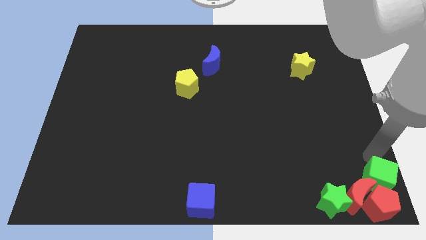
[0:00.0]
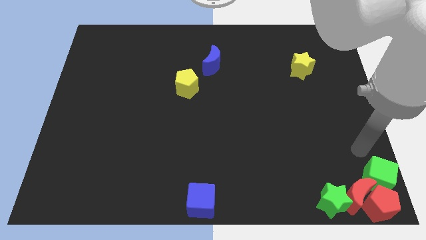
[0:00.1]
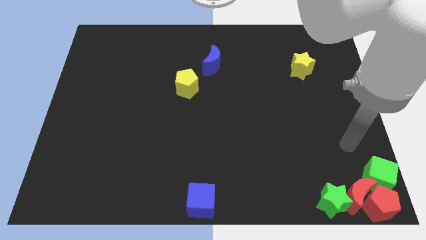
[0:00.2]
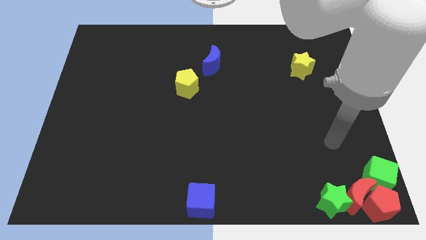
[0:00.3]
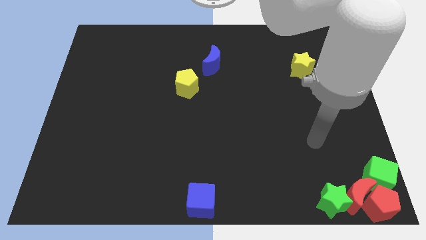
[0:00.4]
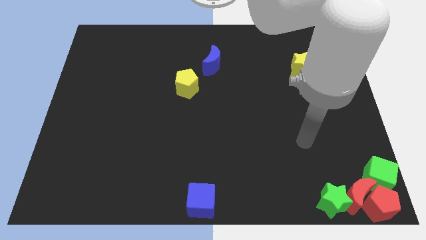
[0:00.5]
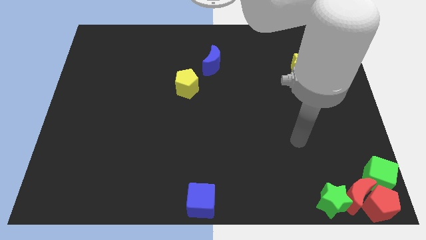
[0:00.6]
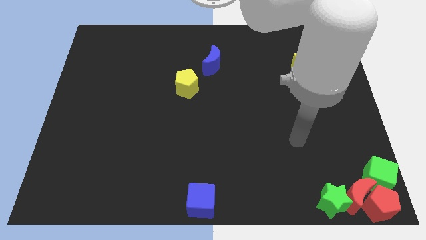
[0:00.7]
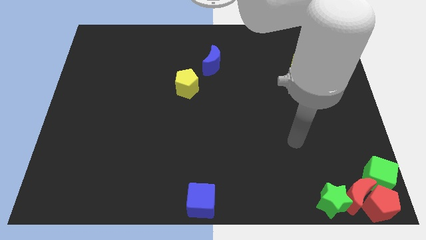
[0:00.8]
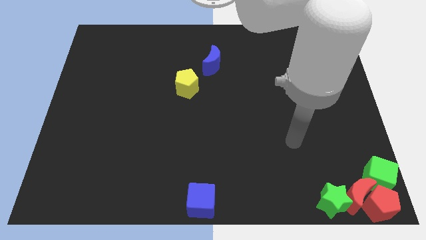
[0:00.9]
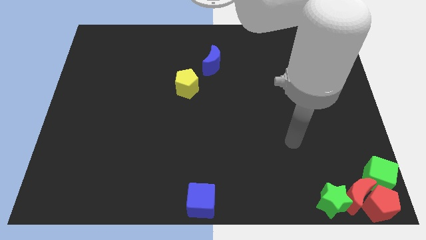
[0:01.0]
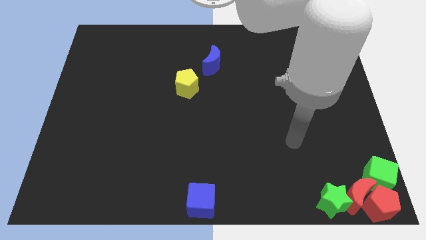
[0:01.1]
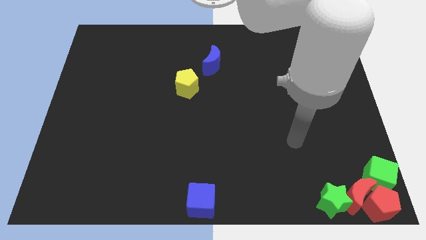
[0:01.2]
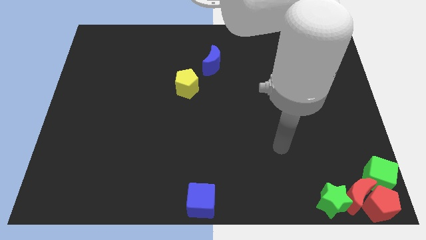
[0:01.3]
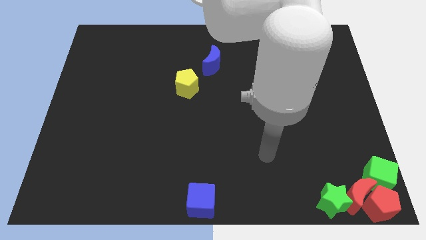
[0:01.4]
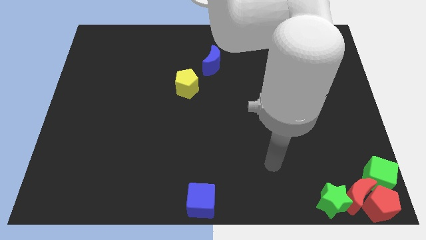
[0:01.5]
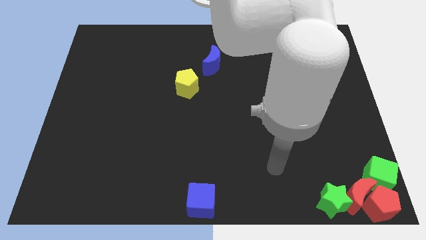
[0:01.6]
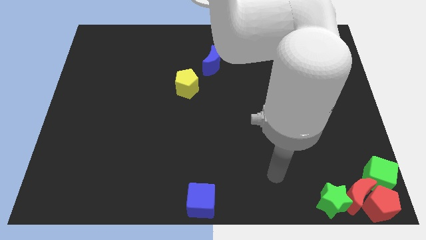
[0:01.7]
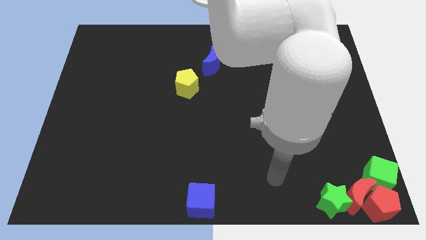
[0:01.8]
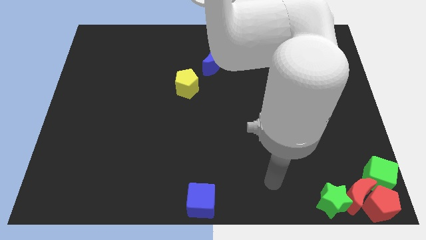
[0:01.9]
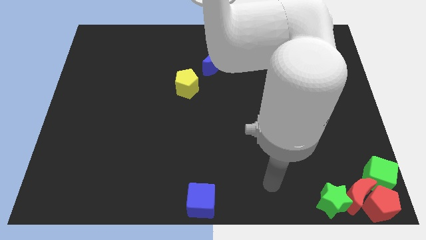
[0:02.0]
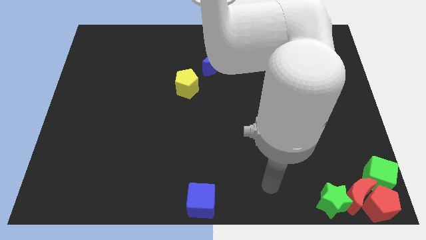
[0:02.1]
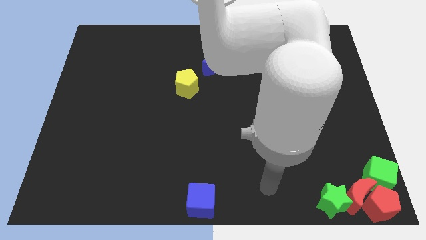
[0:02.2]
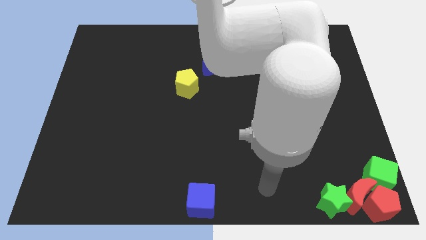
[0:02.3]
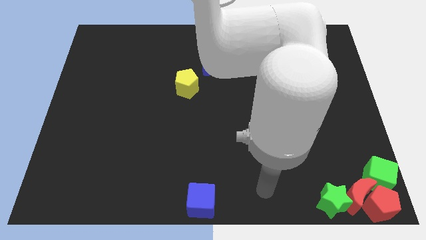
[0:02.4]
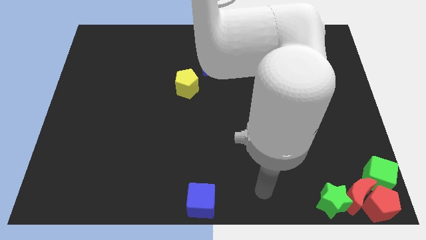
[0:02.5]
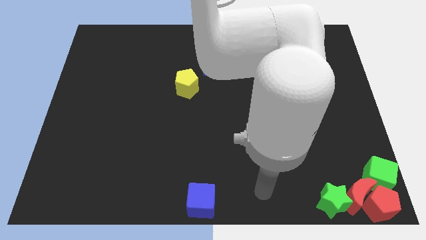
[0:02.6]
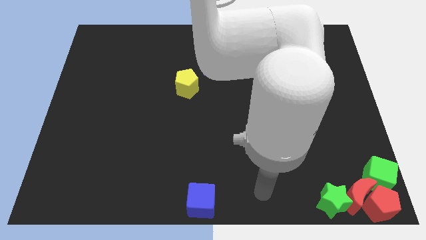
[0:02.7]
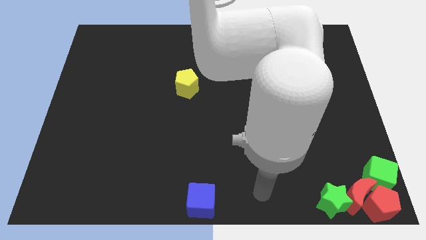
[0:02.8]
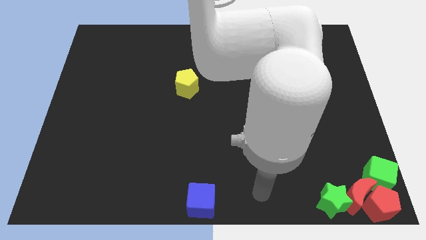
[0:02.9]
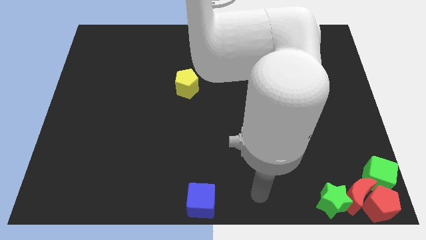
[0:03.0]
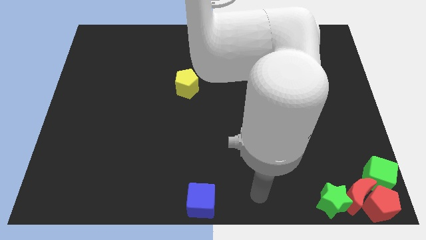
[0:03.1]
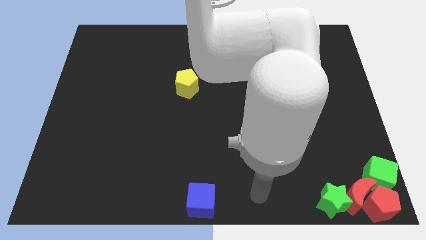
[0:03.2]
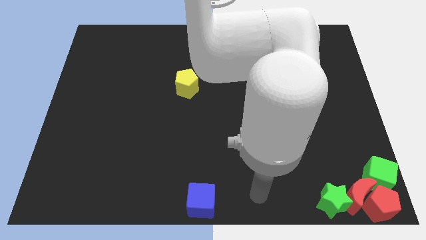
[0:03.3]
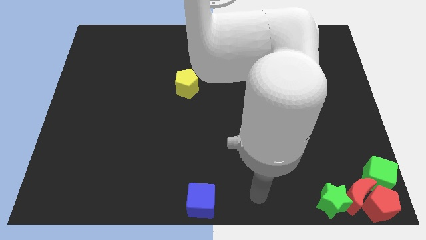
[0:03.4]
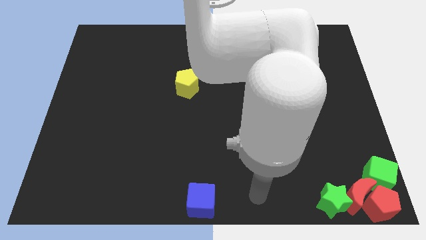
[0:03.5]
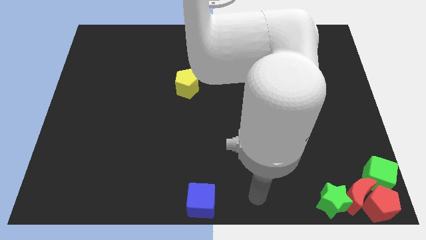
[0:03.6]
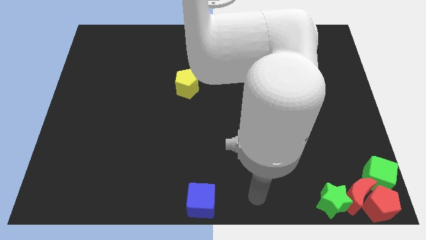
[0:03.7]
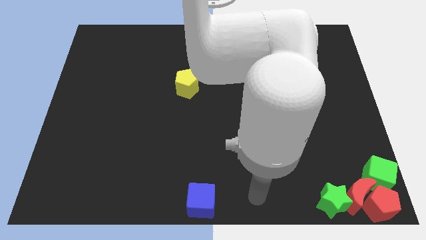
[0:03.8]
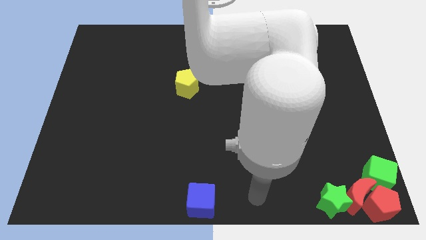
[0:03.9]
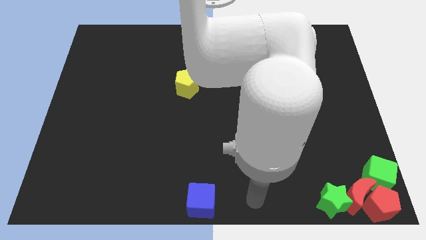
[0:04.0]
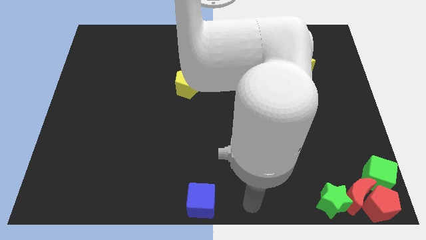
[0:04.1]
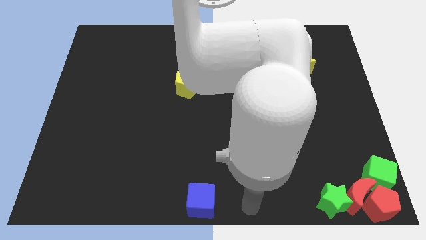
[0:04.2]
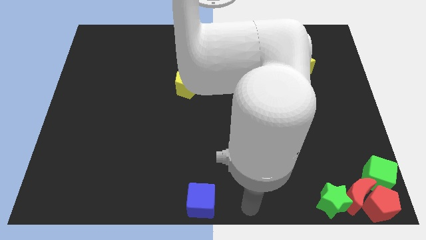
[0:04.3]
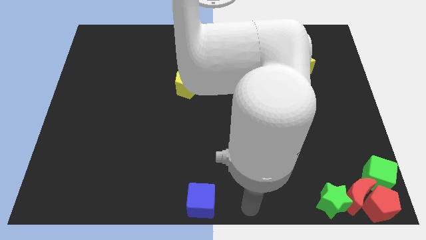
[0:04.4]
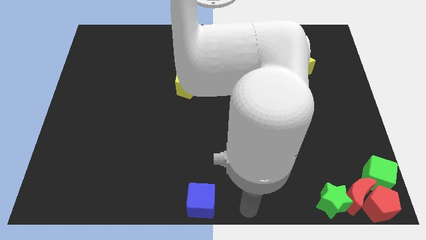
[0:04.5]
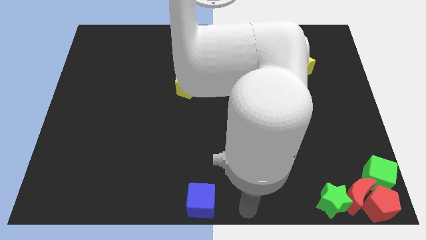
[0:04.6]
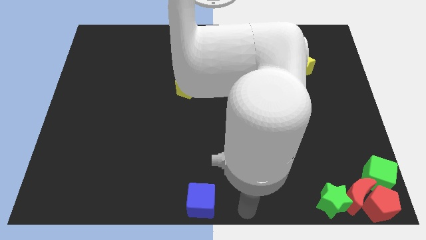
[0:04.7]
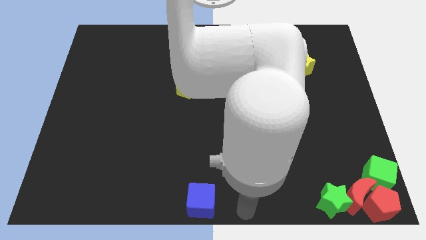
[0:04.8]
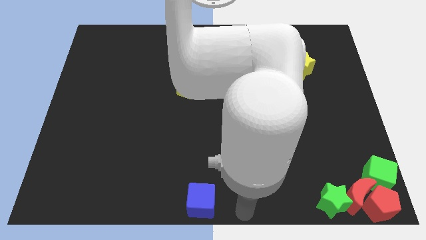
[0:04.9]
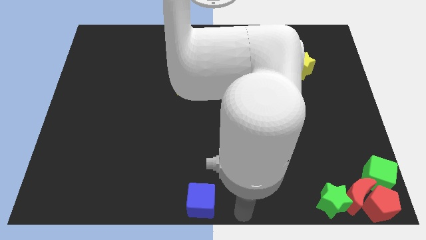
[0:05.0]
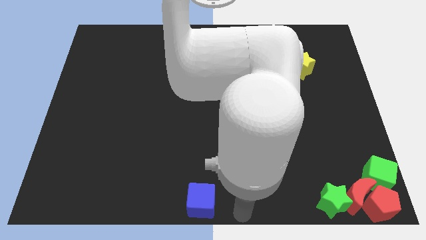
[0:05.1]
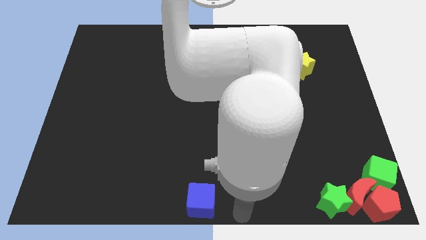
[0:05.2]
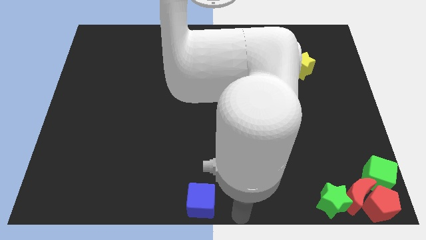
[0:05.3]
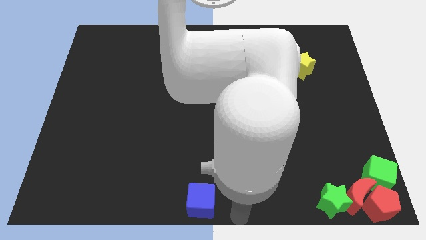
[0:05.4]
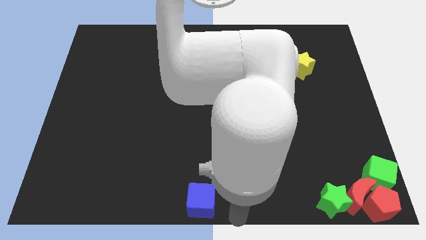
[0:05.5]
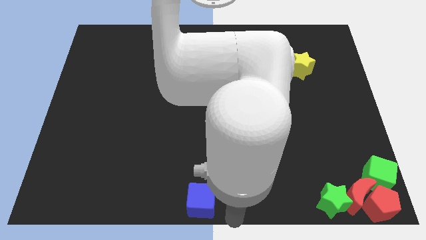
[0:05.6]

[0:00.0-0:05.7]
move your arm towards the blue cube

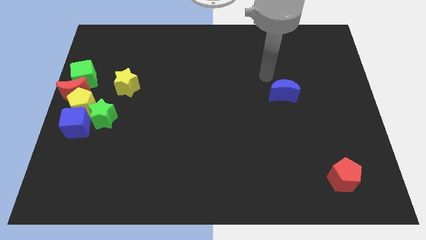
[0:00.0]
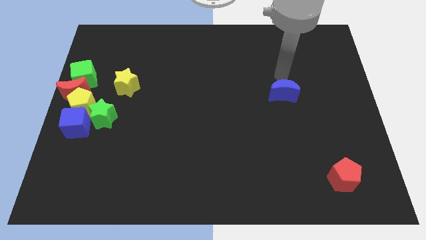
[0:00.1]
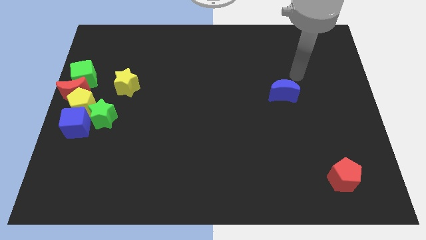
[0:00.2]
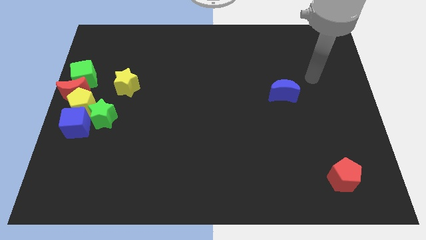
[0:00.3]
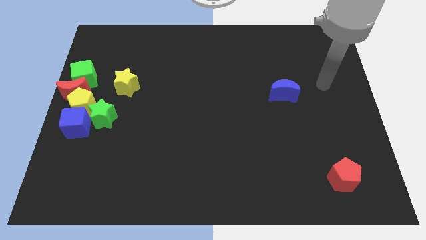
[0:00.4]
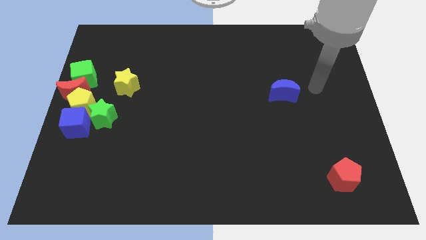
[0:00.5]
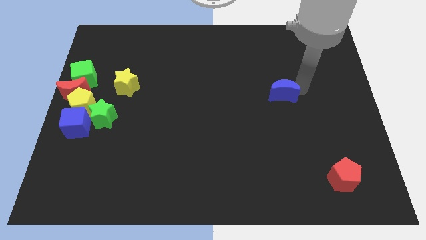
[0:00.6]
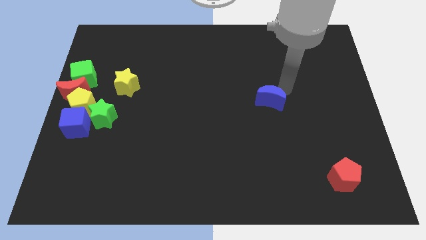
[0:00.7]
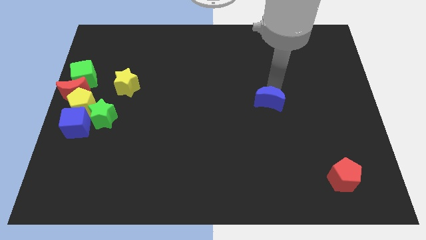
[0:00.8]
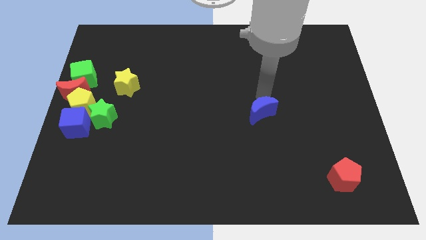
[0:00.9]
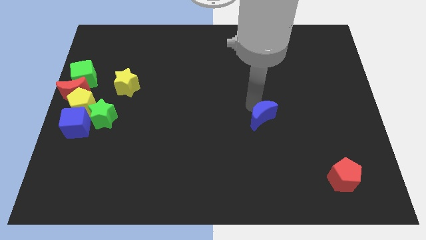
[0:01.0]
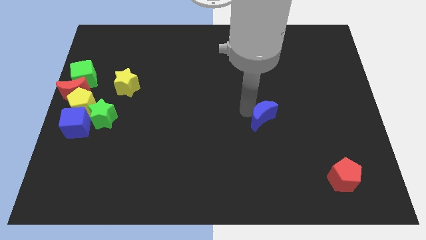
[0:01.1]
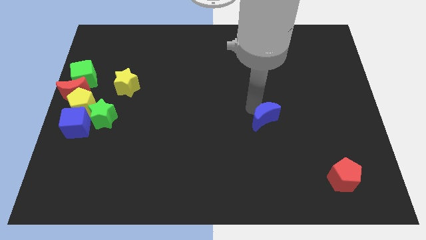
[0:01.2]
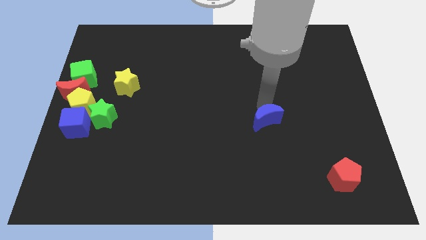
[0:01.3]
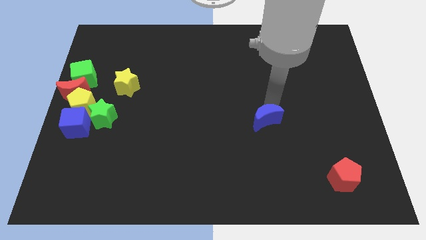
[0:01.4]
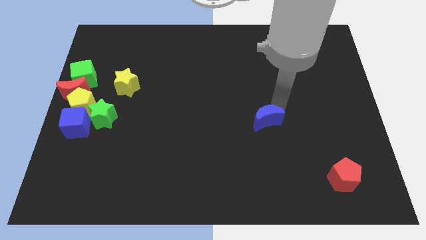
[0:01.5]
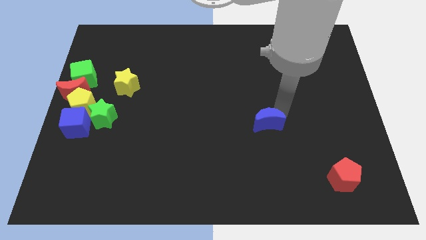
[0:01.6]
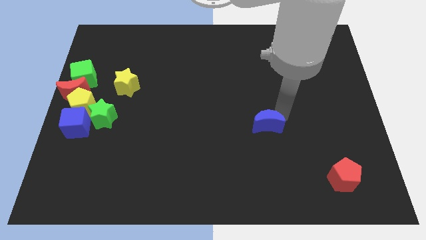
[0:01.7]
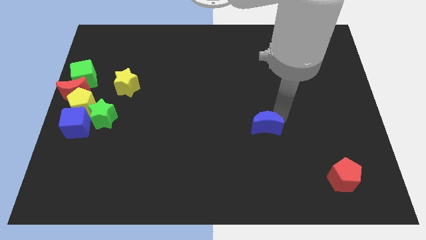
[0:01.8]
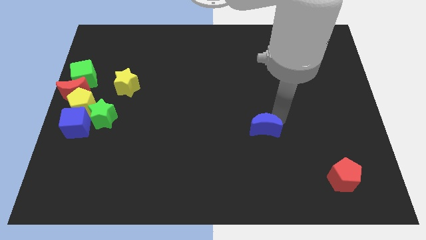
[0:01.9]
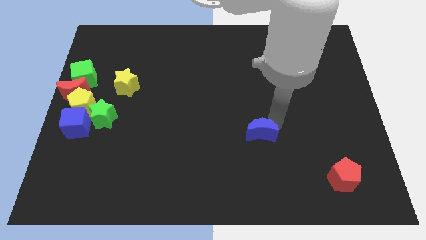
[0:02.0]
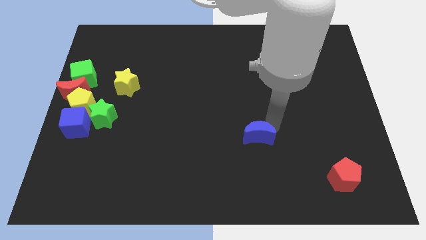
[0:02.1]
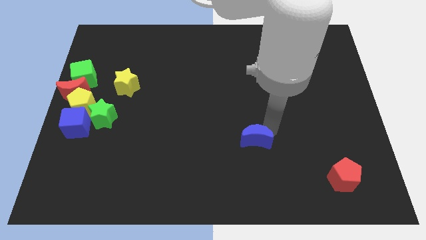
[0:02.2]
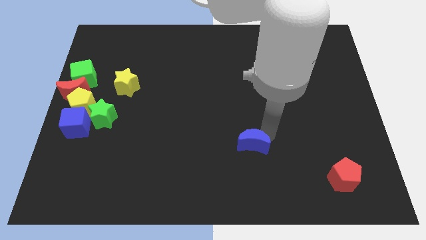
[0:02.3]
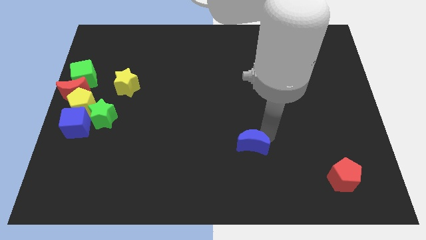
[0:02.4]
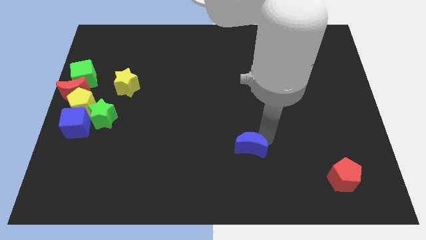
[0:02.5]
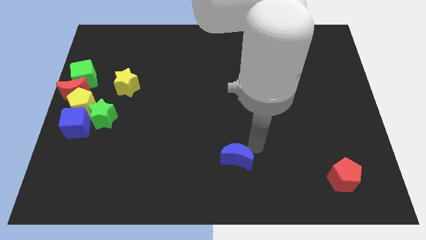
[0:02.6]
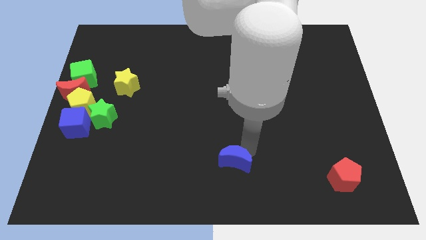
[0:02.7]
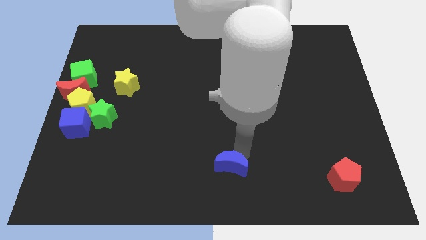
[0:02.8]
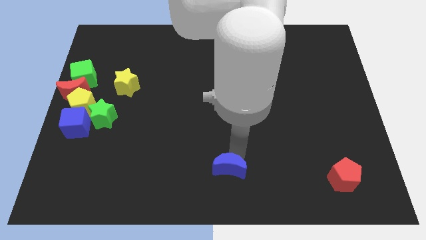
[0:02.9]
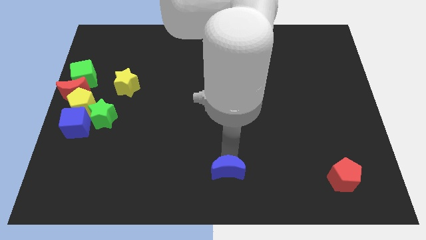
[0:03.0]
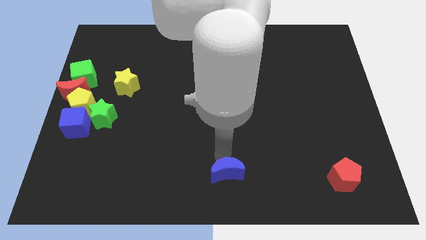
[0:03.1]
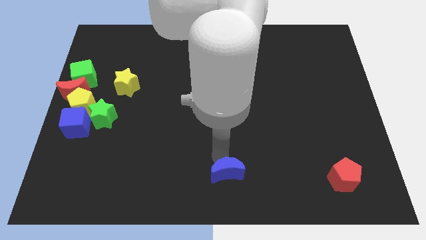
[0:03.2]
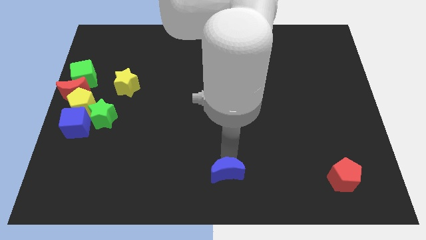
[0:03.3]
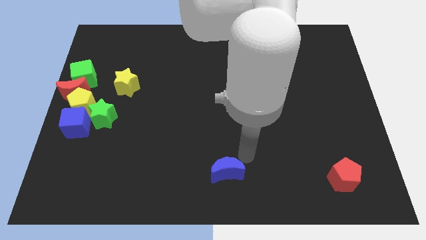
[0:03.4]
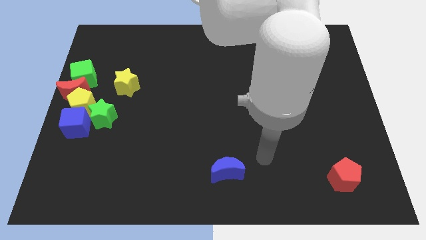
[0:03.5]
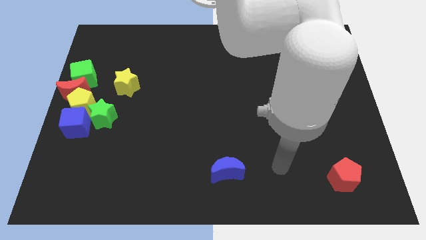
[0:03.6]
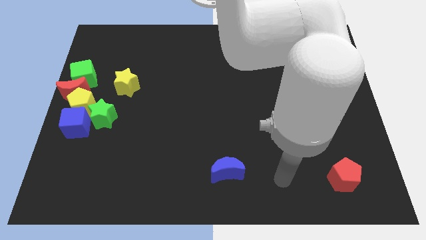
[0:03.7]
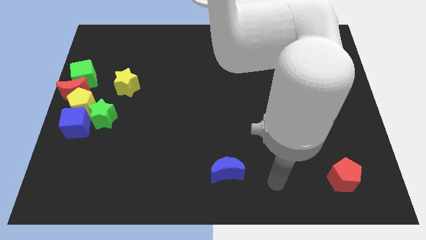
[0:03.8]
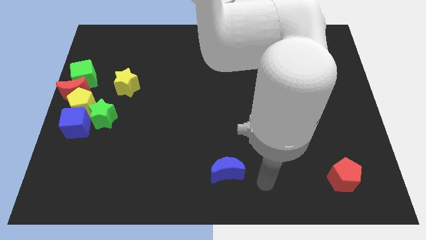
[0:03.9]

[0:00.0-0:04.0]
push blue moon towards the bottom of the board
